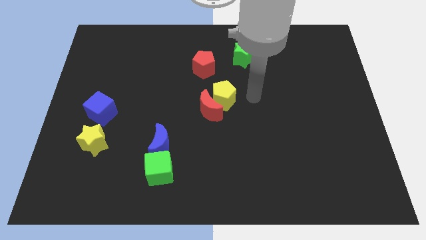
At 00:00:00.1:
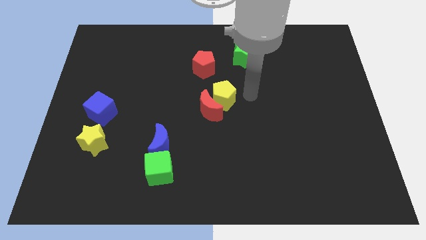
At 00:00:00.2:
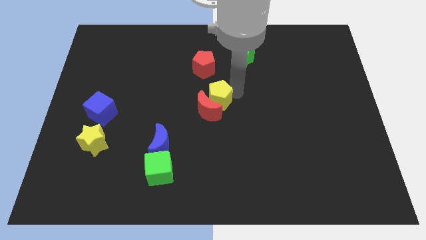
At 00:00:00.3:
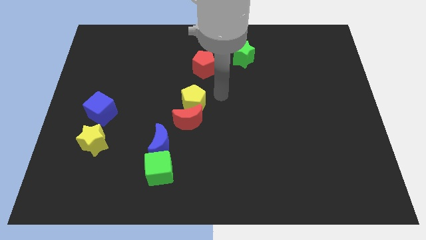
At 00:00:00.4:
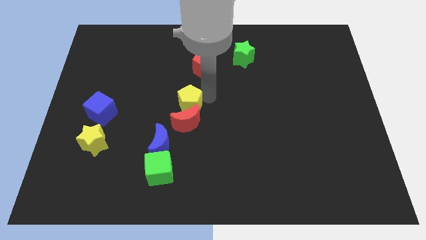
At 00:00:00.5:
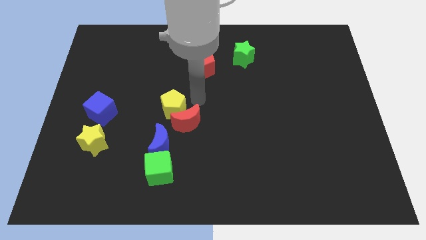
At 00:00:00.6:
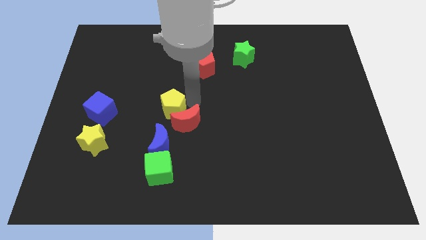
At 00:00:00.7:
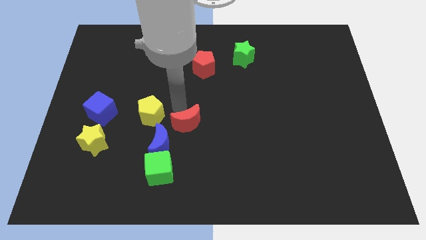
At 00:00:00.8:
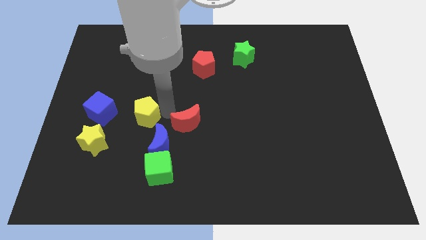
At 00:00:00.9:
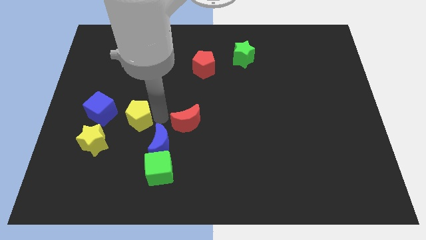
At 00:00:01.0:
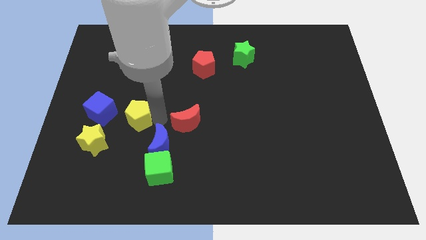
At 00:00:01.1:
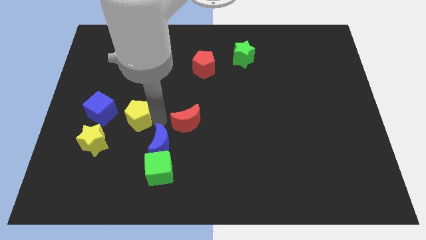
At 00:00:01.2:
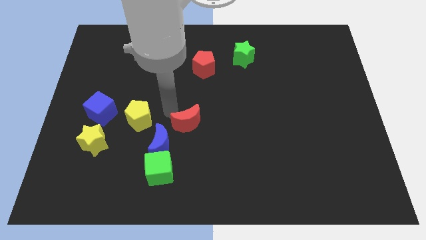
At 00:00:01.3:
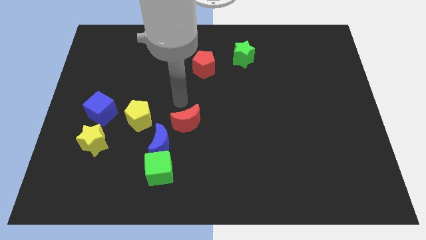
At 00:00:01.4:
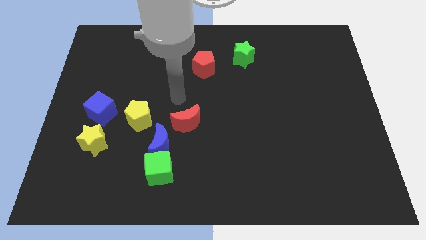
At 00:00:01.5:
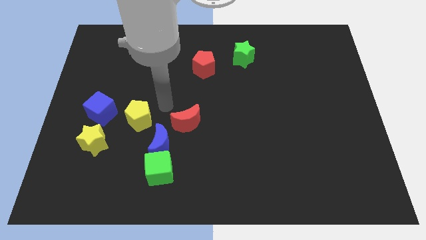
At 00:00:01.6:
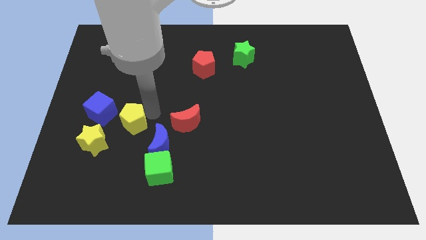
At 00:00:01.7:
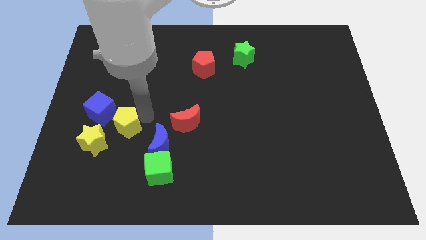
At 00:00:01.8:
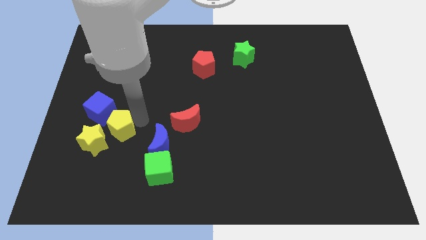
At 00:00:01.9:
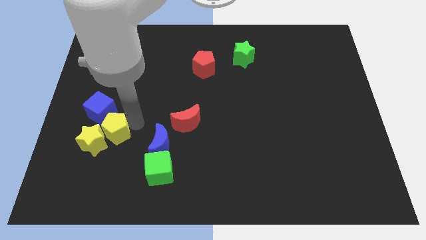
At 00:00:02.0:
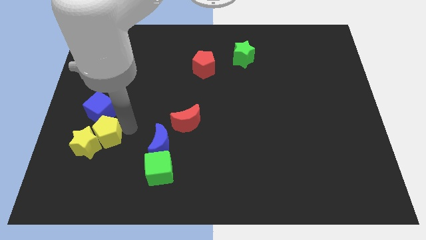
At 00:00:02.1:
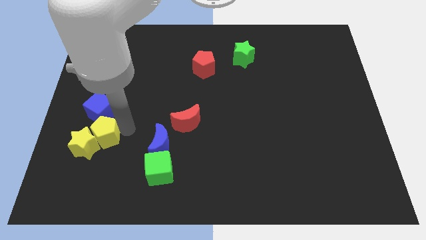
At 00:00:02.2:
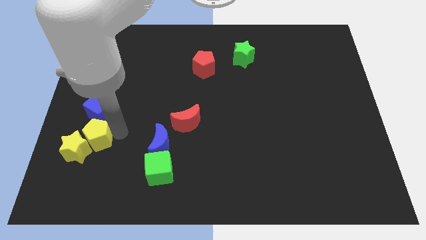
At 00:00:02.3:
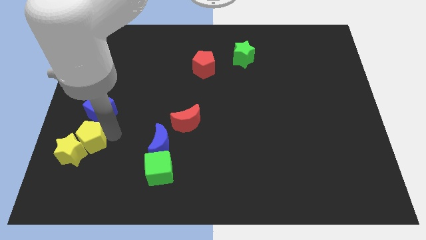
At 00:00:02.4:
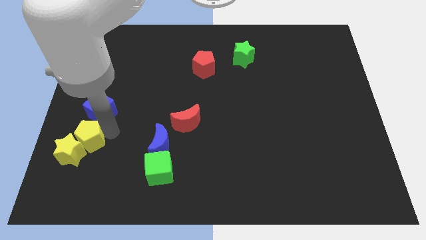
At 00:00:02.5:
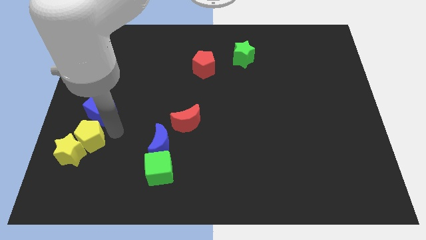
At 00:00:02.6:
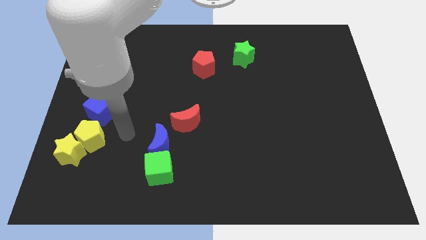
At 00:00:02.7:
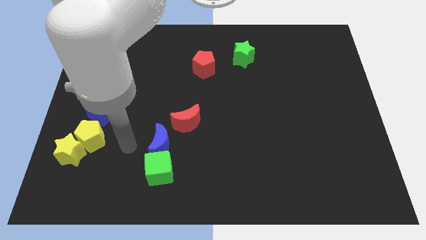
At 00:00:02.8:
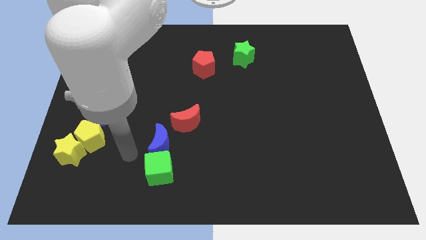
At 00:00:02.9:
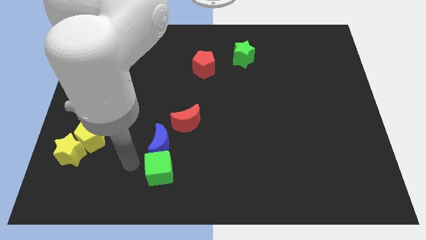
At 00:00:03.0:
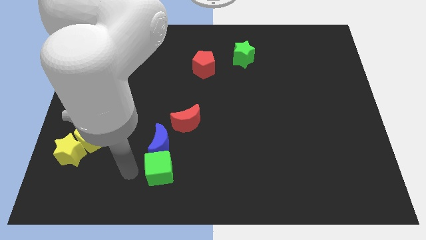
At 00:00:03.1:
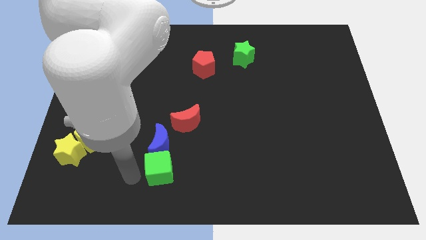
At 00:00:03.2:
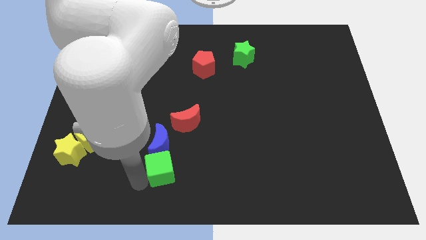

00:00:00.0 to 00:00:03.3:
push the yellow pentagon into the yellow star

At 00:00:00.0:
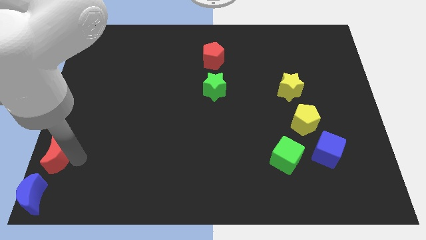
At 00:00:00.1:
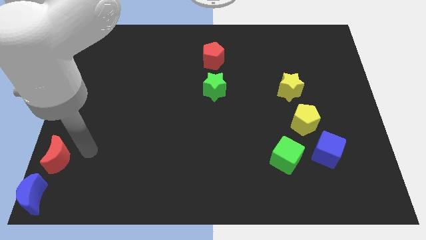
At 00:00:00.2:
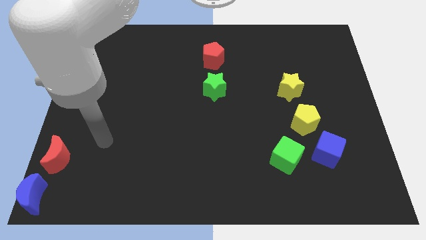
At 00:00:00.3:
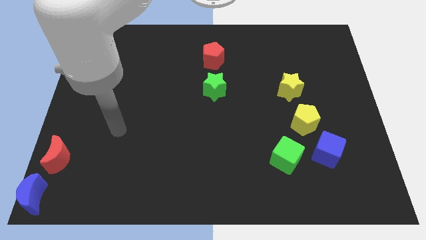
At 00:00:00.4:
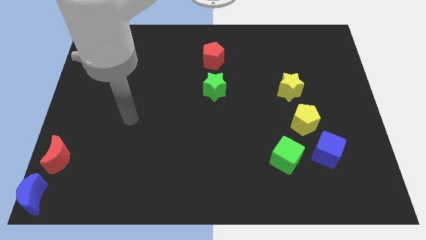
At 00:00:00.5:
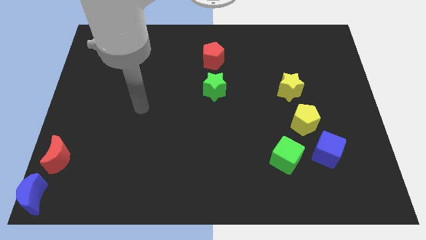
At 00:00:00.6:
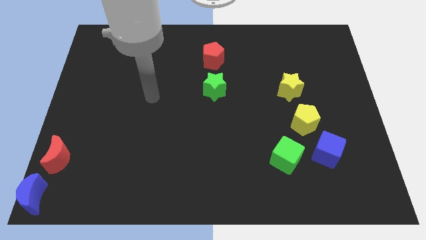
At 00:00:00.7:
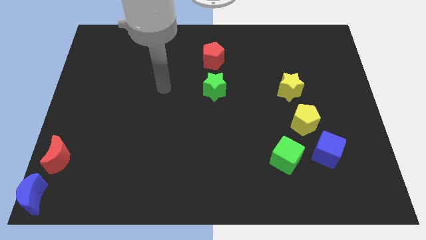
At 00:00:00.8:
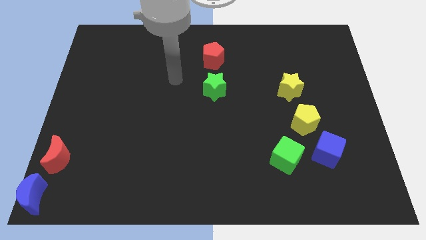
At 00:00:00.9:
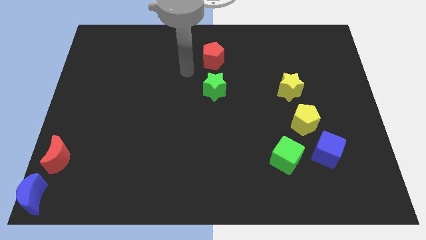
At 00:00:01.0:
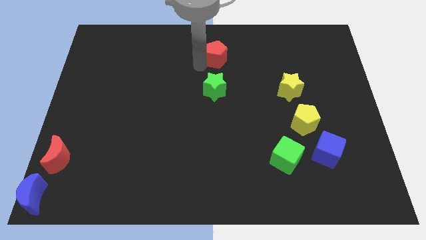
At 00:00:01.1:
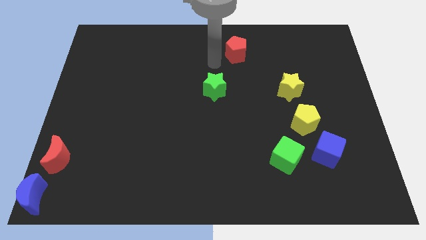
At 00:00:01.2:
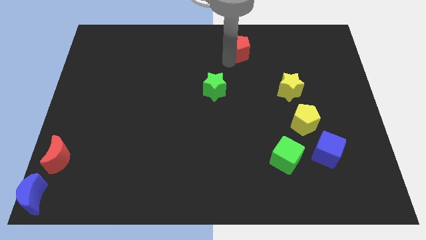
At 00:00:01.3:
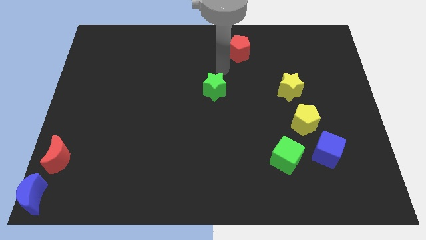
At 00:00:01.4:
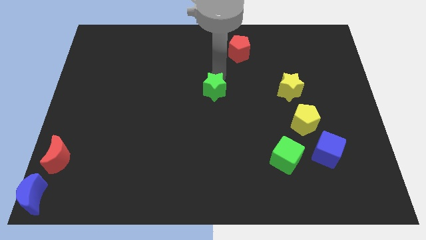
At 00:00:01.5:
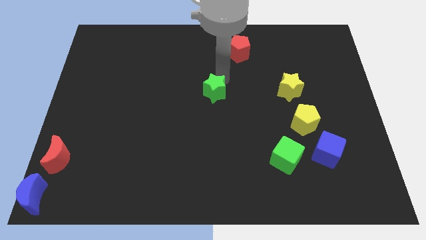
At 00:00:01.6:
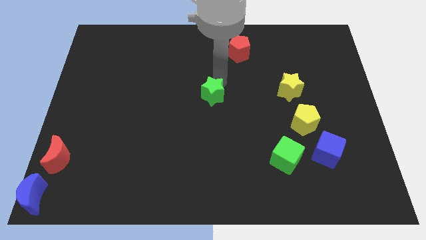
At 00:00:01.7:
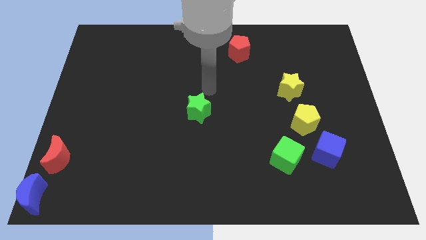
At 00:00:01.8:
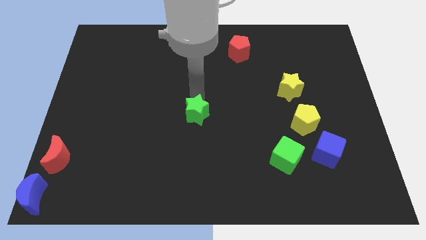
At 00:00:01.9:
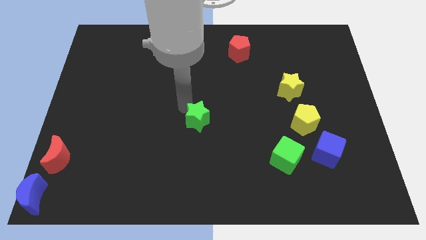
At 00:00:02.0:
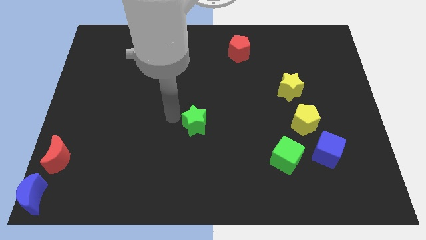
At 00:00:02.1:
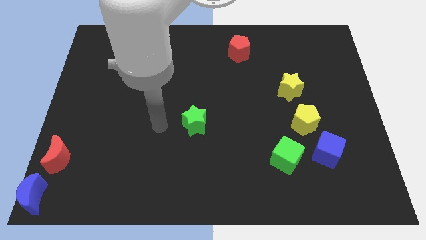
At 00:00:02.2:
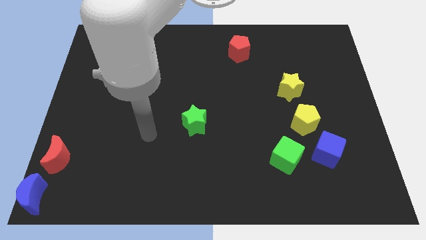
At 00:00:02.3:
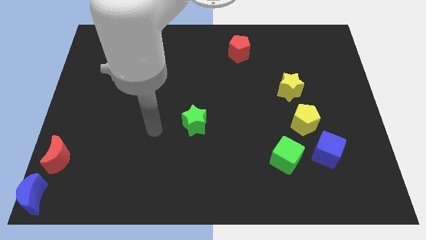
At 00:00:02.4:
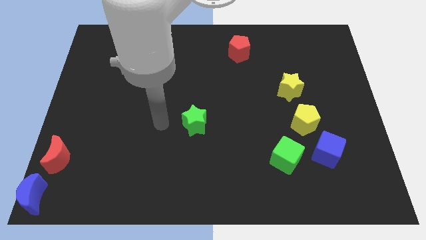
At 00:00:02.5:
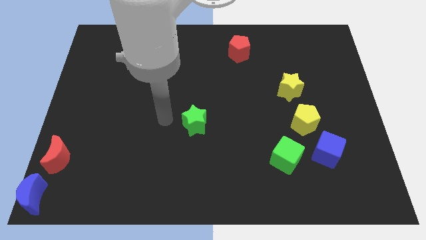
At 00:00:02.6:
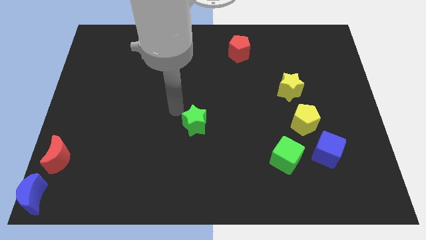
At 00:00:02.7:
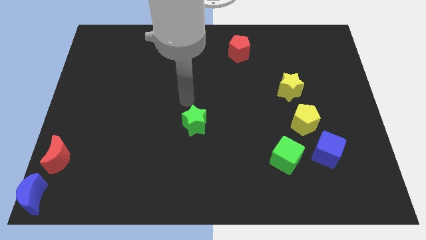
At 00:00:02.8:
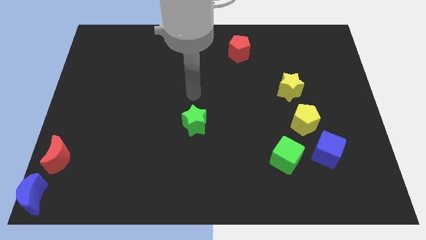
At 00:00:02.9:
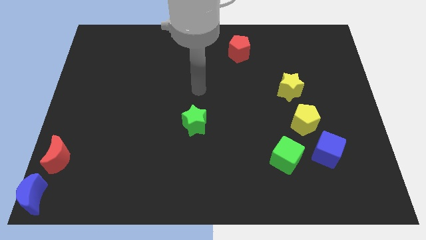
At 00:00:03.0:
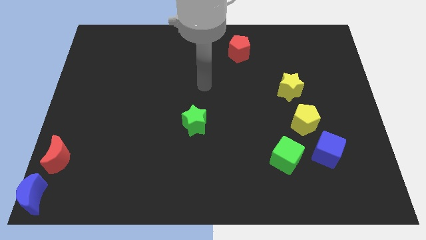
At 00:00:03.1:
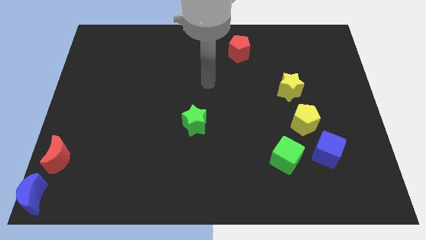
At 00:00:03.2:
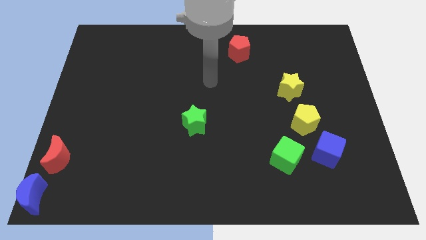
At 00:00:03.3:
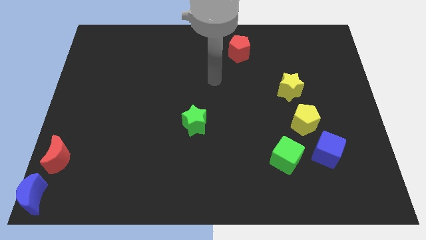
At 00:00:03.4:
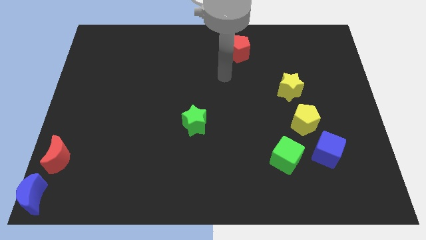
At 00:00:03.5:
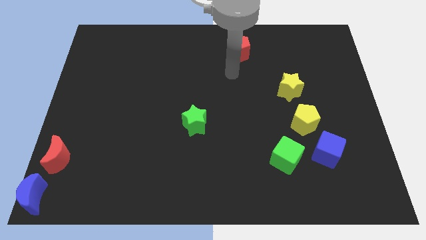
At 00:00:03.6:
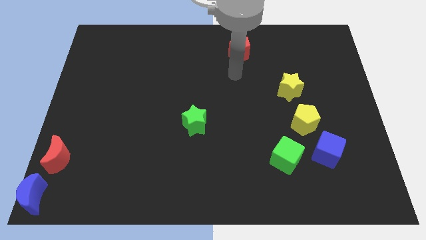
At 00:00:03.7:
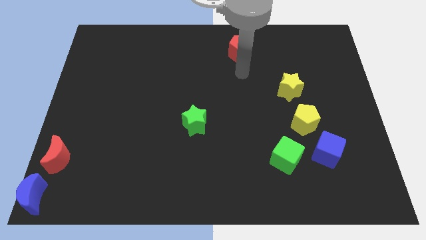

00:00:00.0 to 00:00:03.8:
place the green star to the left of the yellow pentagon

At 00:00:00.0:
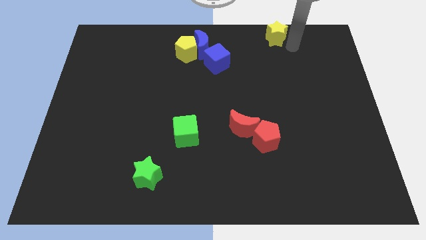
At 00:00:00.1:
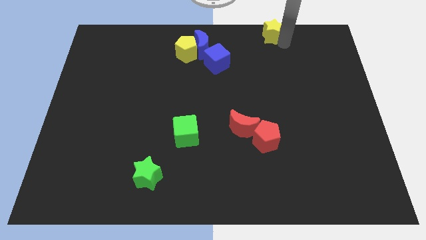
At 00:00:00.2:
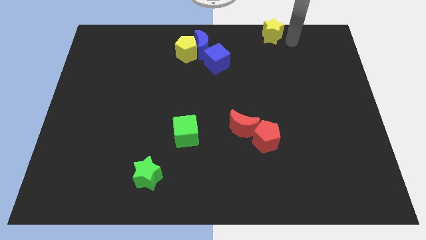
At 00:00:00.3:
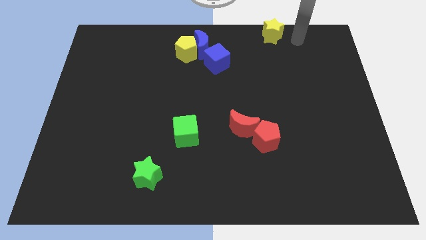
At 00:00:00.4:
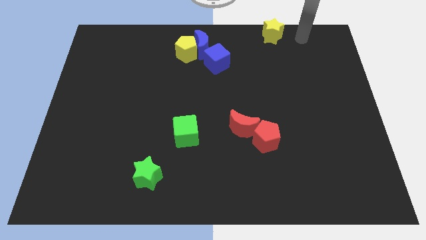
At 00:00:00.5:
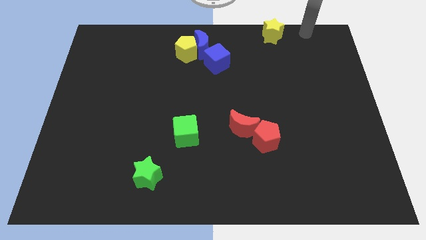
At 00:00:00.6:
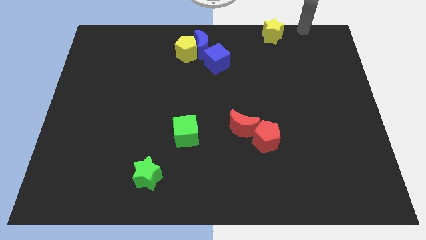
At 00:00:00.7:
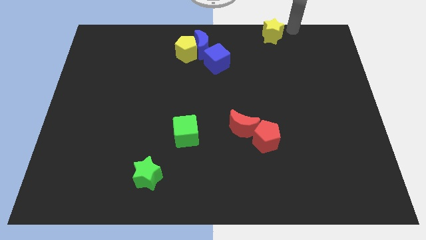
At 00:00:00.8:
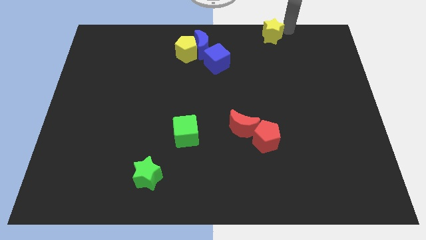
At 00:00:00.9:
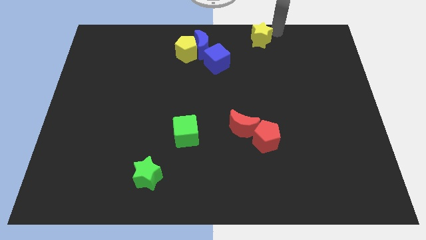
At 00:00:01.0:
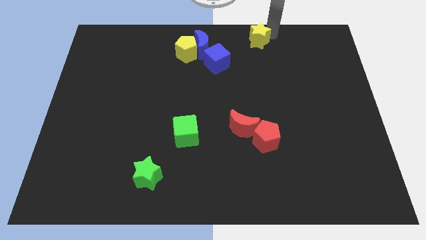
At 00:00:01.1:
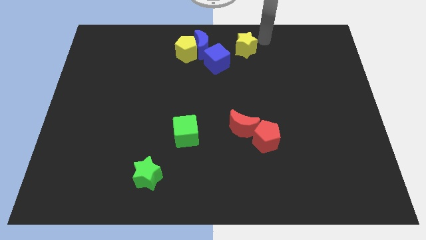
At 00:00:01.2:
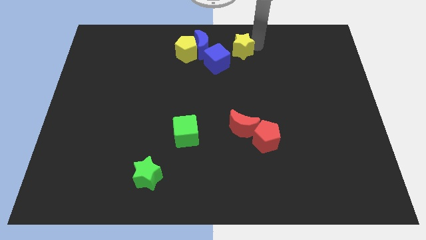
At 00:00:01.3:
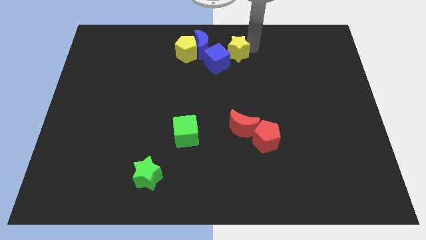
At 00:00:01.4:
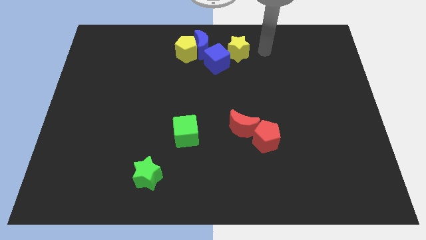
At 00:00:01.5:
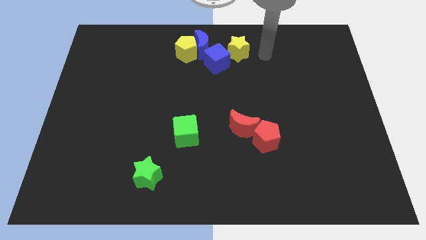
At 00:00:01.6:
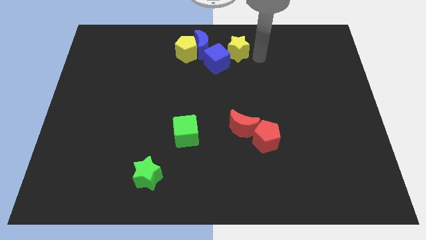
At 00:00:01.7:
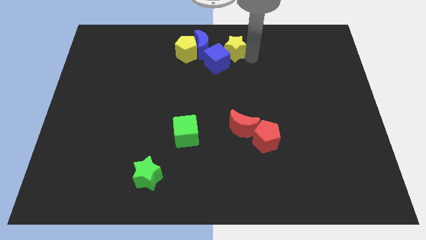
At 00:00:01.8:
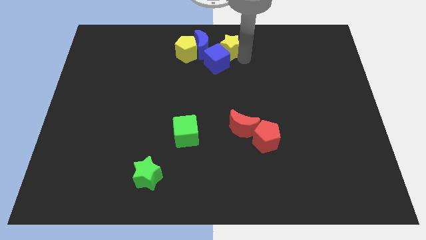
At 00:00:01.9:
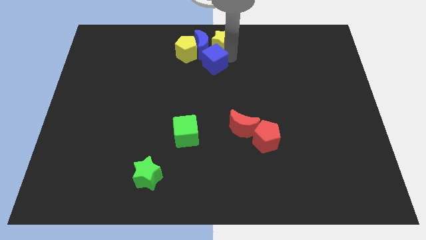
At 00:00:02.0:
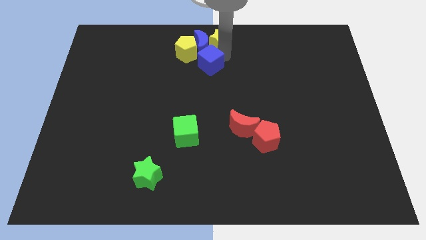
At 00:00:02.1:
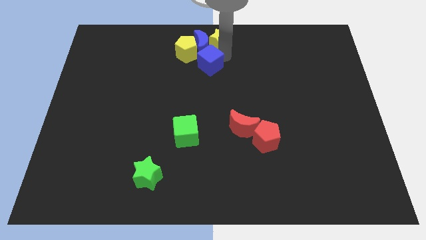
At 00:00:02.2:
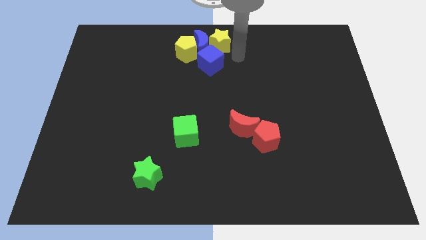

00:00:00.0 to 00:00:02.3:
push the yellow star to the top of the blue cube
